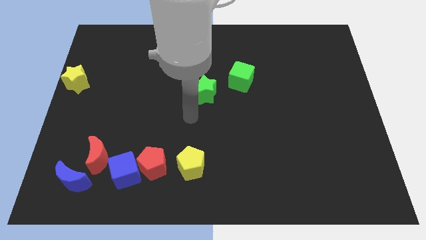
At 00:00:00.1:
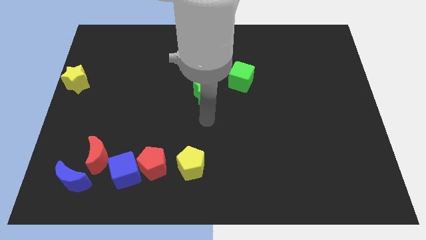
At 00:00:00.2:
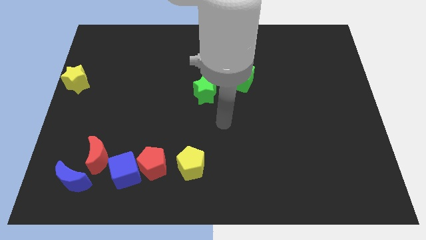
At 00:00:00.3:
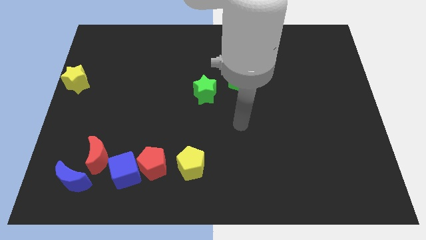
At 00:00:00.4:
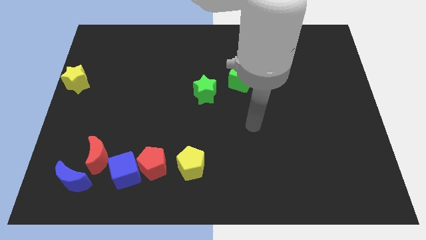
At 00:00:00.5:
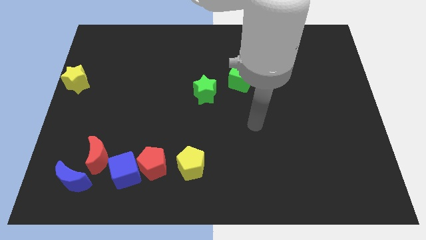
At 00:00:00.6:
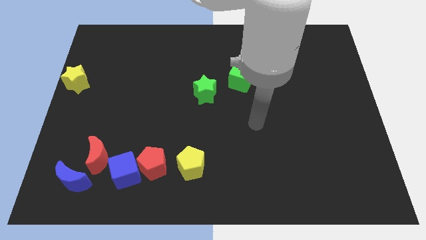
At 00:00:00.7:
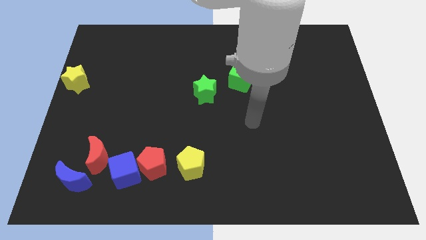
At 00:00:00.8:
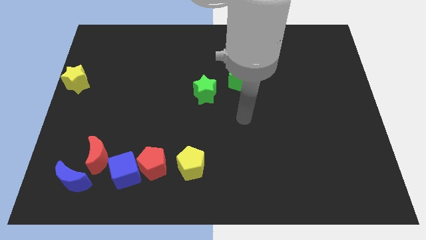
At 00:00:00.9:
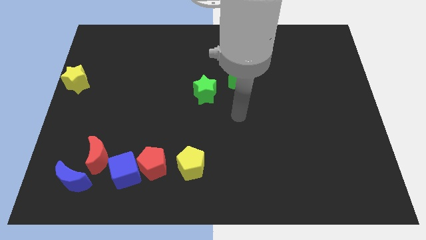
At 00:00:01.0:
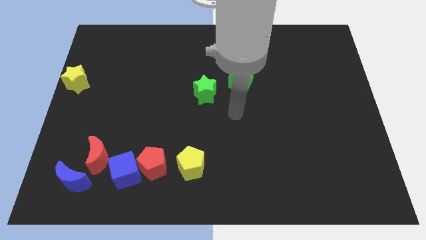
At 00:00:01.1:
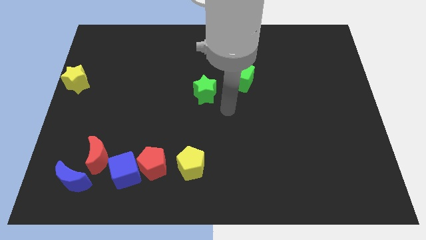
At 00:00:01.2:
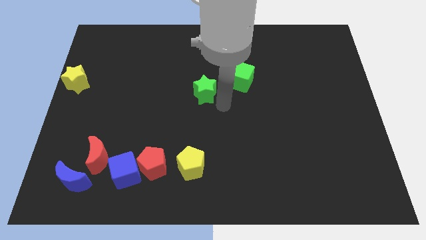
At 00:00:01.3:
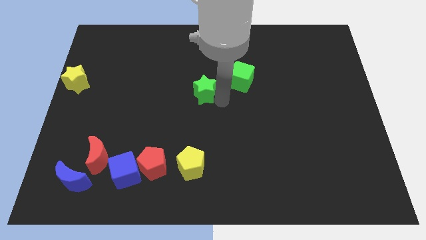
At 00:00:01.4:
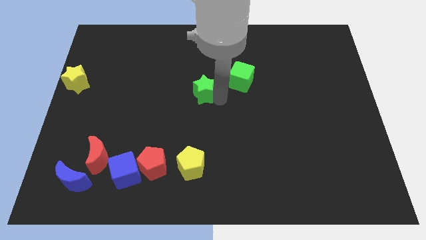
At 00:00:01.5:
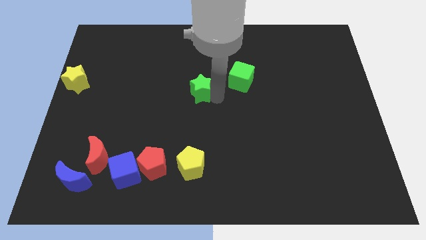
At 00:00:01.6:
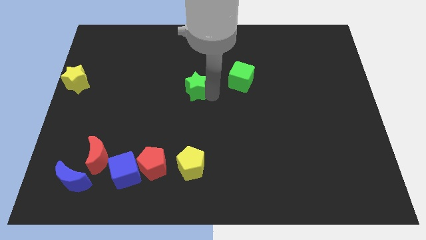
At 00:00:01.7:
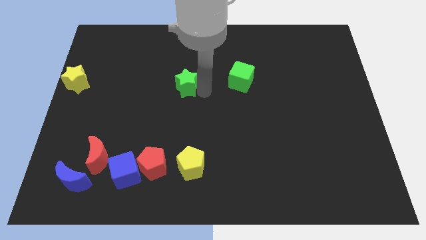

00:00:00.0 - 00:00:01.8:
move the green star on the left side of the green cube

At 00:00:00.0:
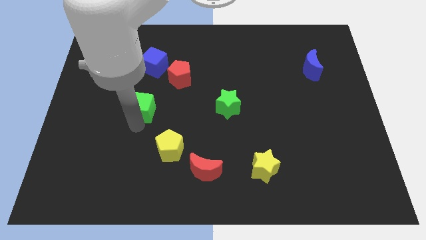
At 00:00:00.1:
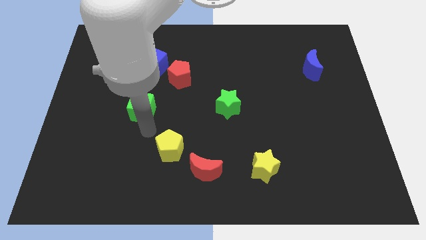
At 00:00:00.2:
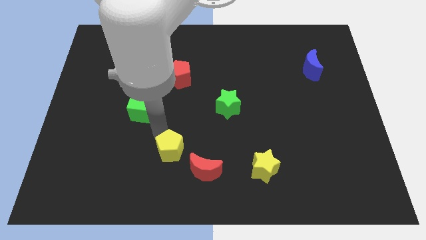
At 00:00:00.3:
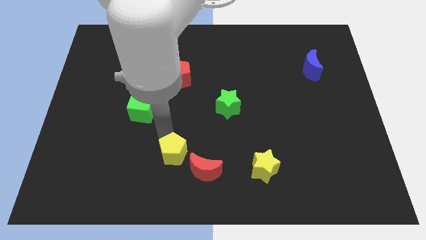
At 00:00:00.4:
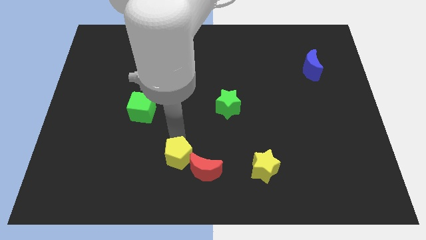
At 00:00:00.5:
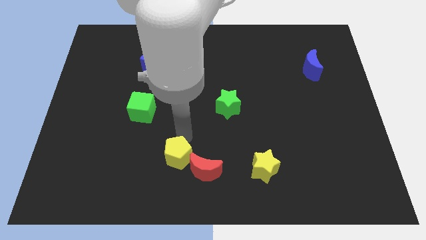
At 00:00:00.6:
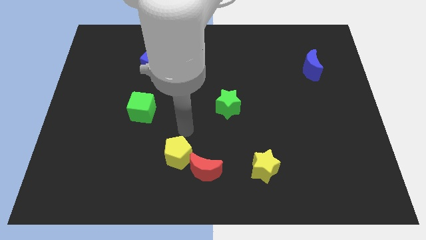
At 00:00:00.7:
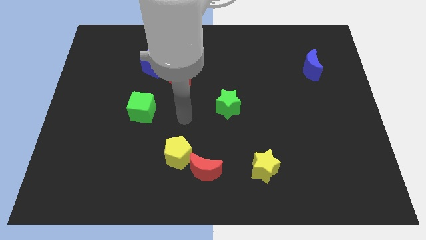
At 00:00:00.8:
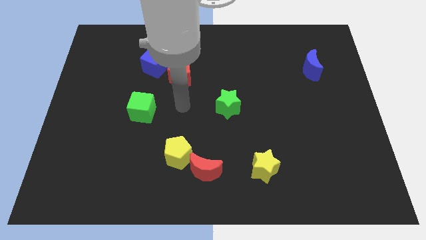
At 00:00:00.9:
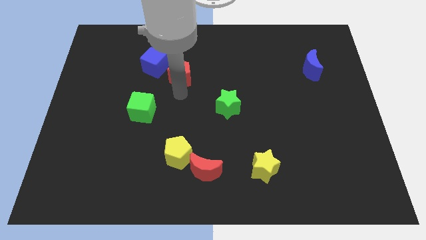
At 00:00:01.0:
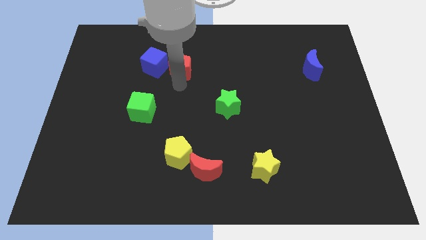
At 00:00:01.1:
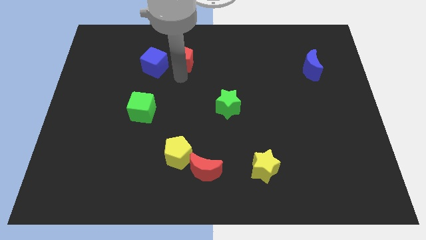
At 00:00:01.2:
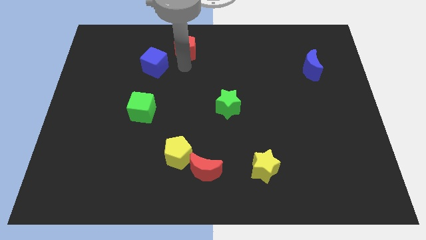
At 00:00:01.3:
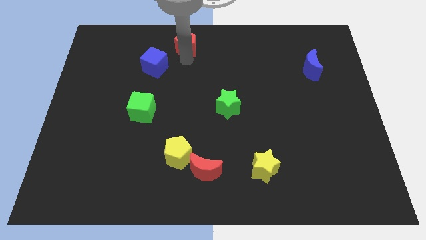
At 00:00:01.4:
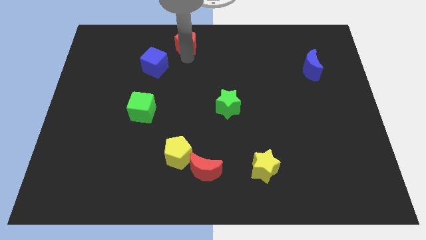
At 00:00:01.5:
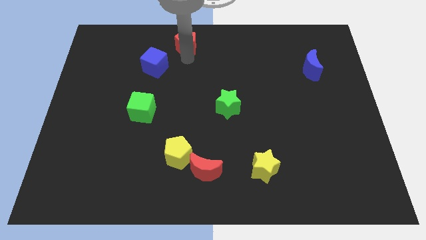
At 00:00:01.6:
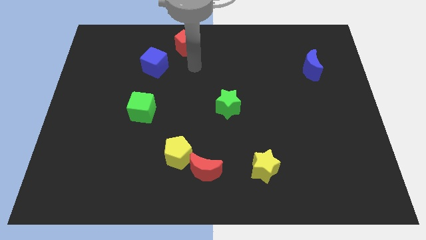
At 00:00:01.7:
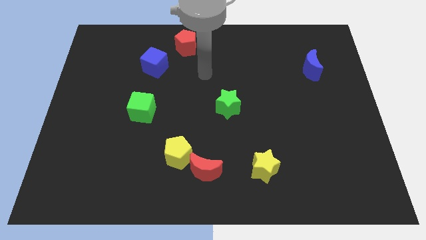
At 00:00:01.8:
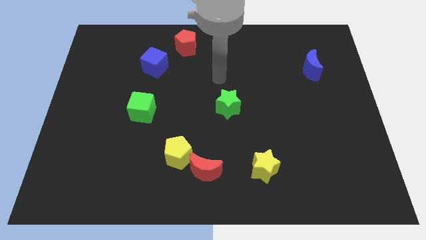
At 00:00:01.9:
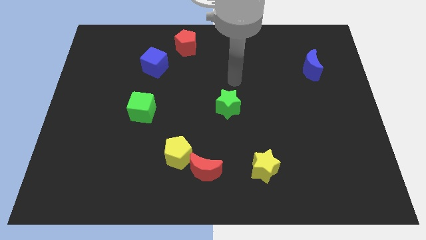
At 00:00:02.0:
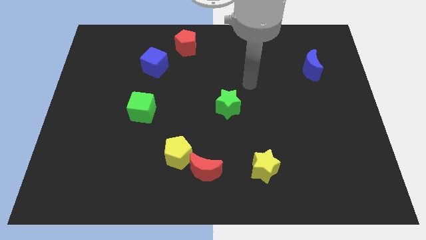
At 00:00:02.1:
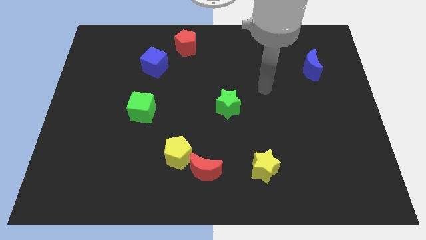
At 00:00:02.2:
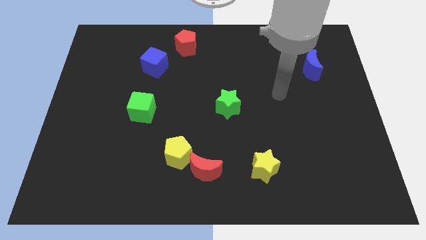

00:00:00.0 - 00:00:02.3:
push the red pentagon diagonally top right to blue cube

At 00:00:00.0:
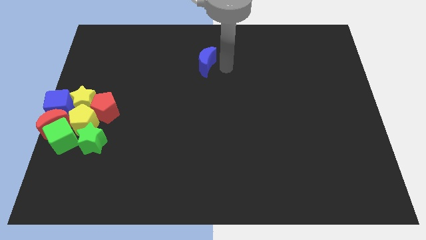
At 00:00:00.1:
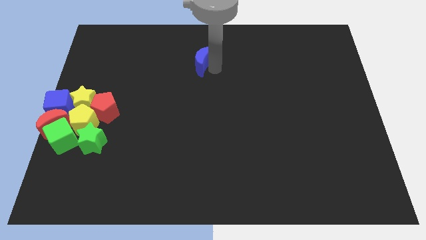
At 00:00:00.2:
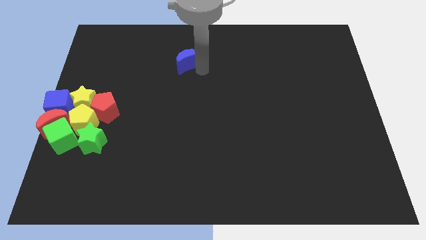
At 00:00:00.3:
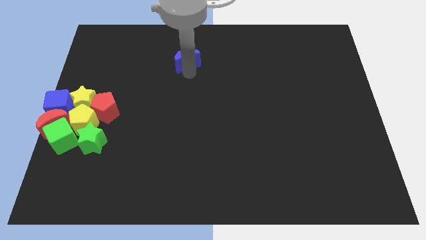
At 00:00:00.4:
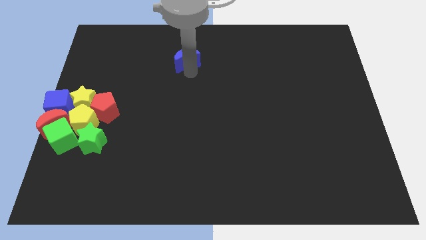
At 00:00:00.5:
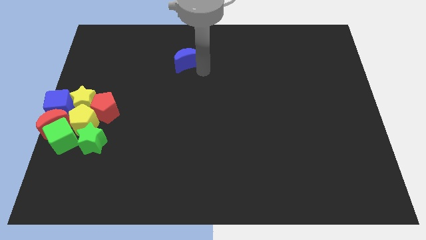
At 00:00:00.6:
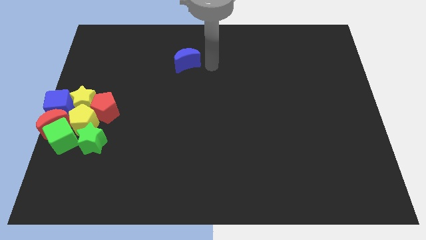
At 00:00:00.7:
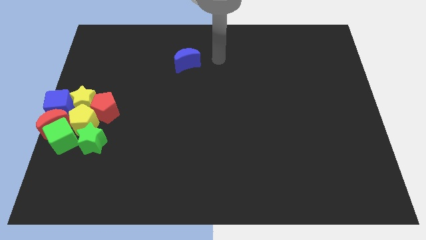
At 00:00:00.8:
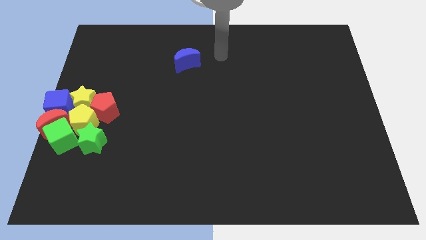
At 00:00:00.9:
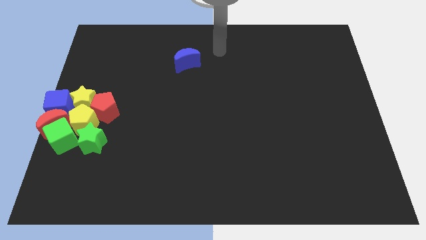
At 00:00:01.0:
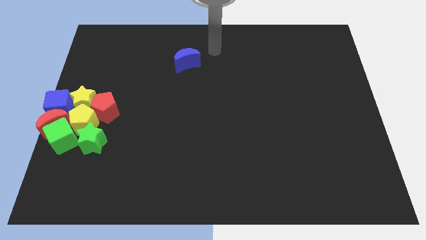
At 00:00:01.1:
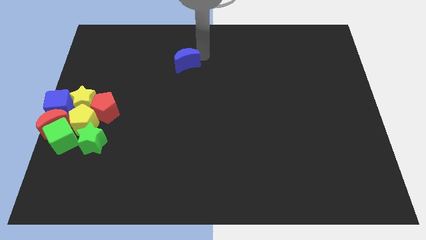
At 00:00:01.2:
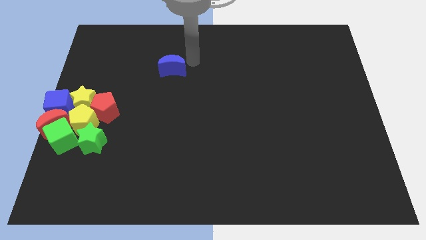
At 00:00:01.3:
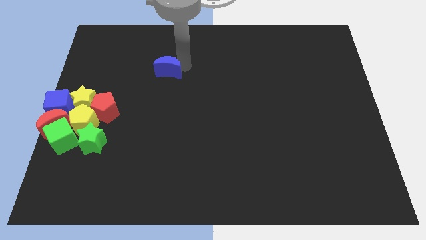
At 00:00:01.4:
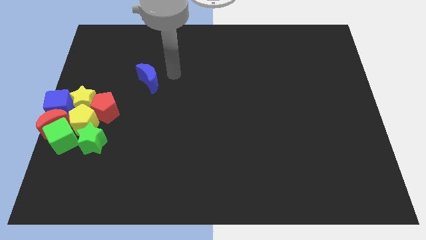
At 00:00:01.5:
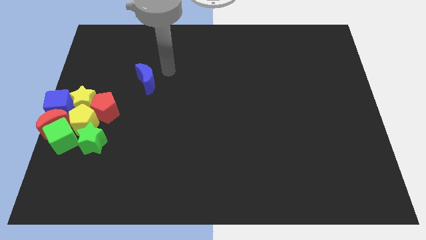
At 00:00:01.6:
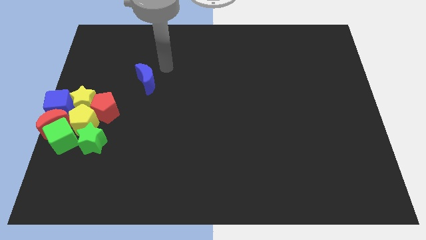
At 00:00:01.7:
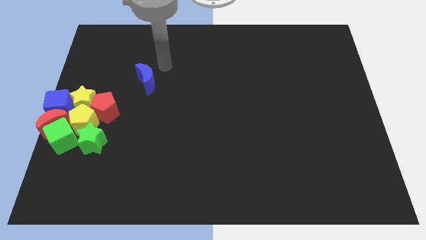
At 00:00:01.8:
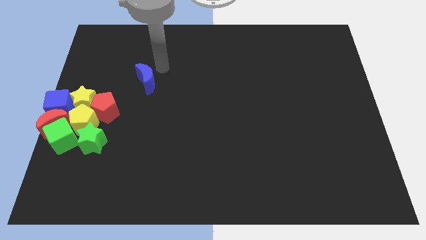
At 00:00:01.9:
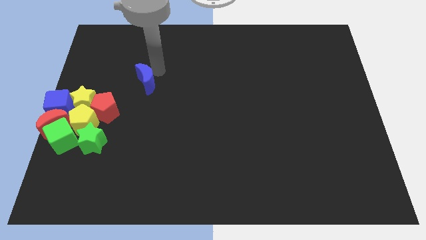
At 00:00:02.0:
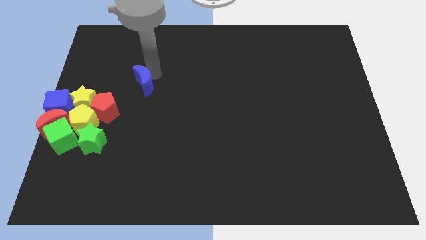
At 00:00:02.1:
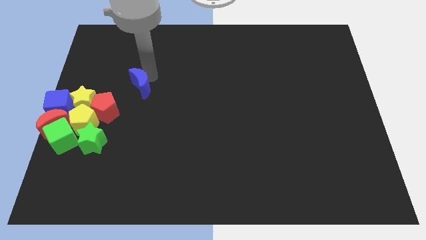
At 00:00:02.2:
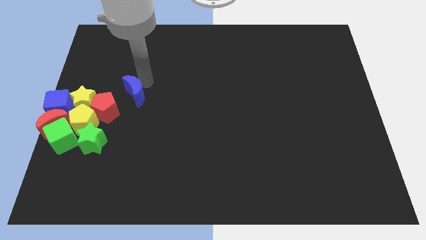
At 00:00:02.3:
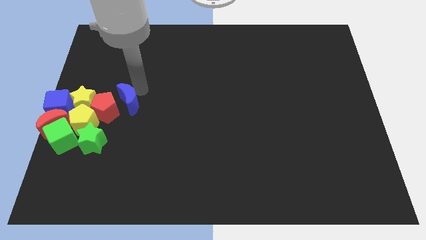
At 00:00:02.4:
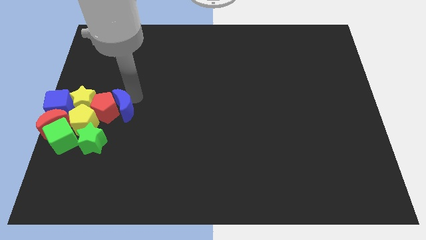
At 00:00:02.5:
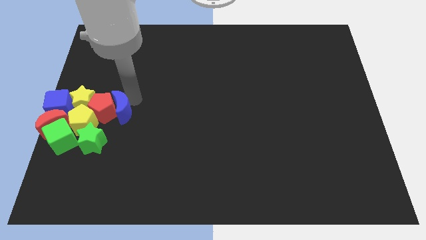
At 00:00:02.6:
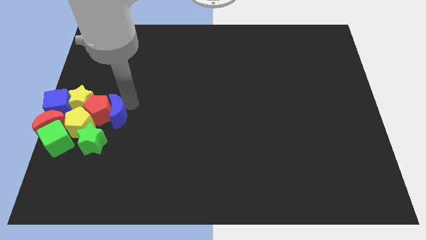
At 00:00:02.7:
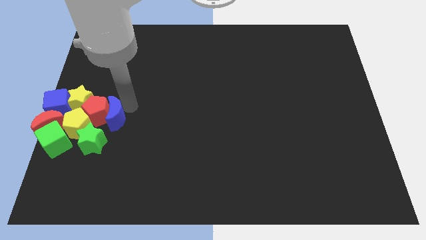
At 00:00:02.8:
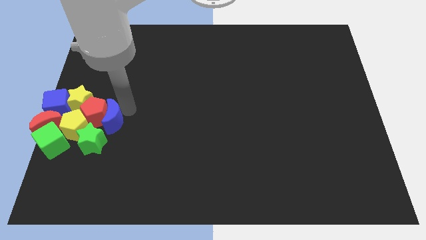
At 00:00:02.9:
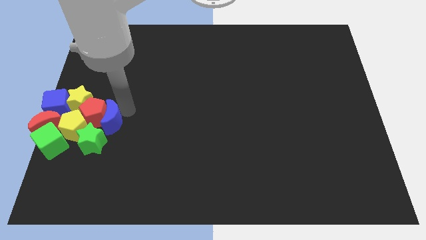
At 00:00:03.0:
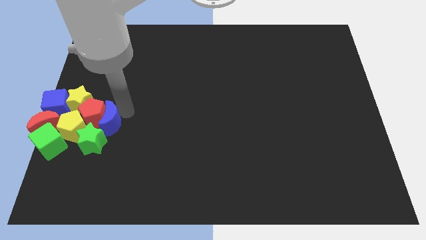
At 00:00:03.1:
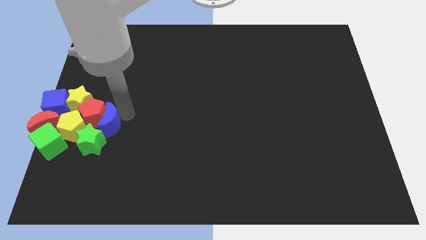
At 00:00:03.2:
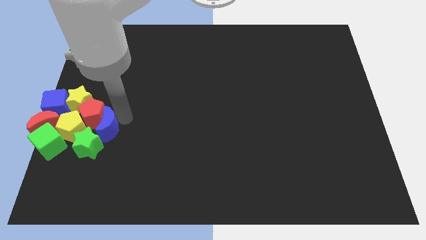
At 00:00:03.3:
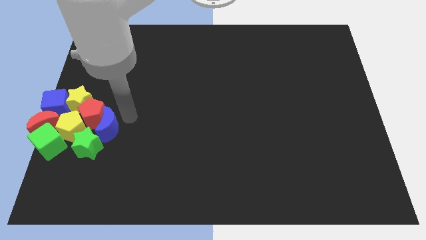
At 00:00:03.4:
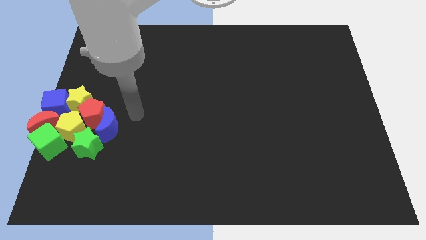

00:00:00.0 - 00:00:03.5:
push the blue moon into the red pentagon

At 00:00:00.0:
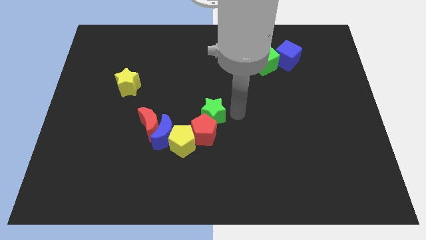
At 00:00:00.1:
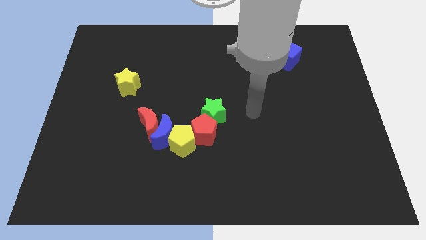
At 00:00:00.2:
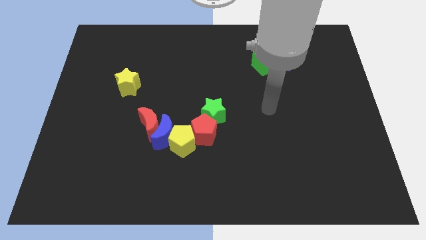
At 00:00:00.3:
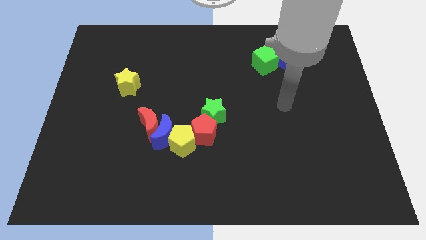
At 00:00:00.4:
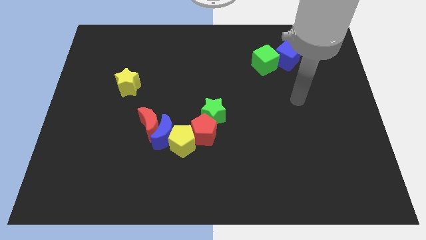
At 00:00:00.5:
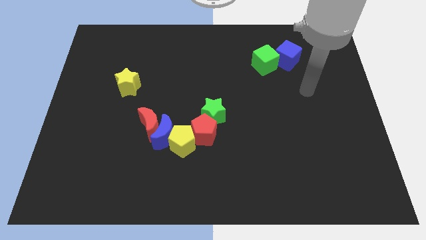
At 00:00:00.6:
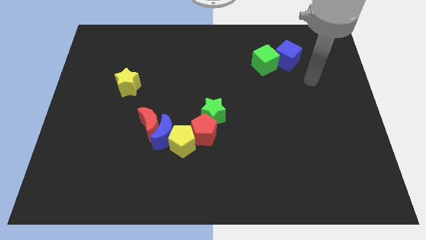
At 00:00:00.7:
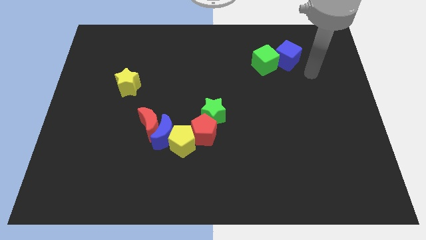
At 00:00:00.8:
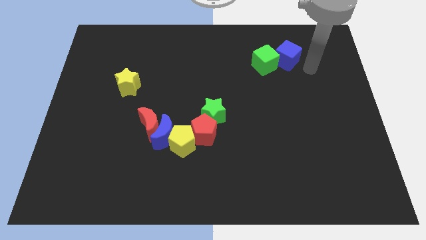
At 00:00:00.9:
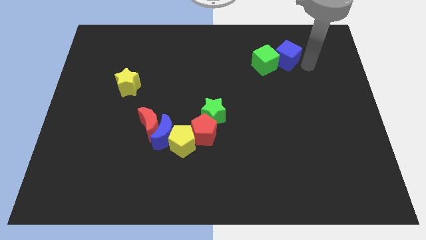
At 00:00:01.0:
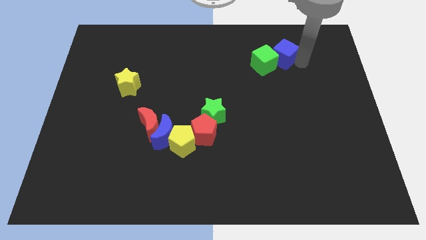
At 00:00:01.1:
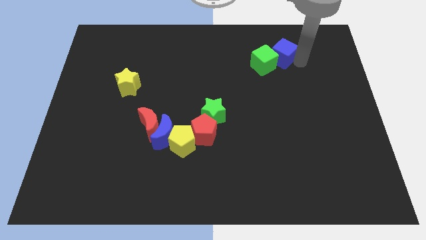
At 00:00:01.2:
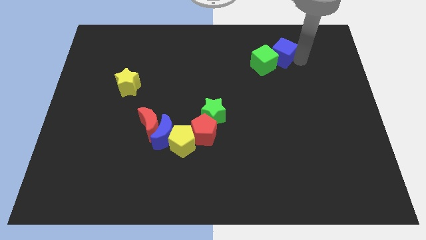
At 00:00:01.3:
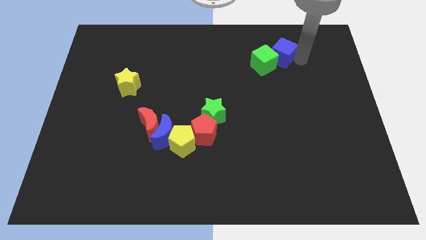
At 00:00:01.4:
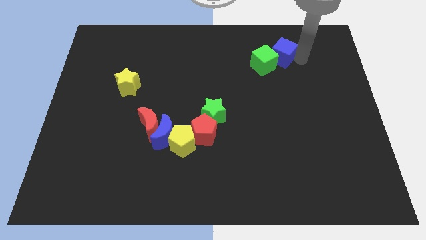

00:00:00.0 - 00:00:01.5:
tap on blue cube with your arm
